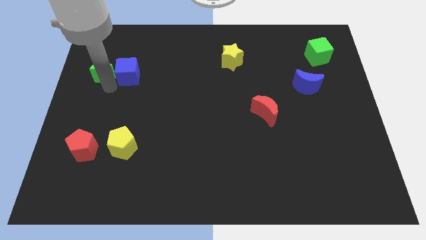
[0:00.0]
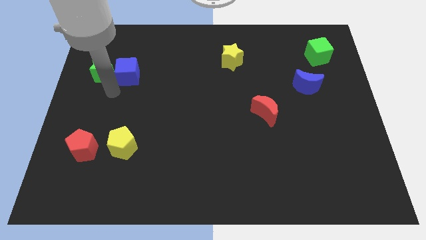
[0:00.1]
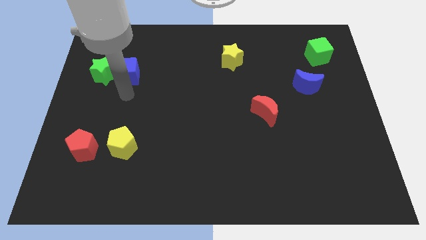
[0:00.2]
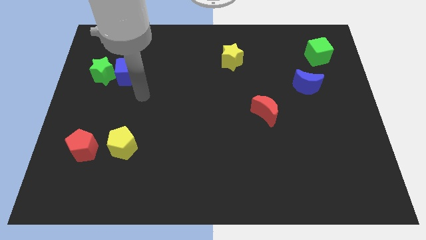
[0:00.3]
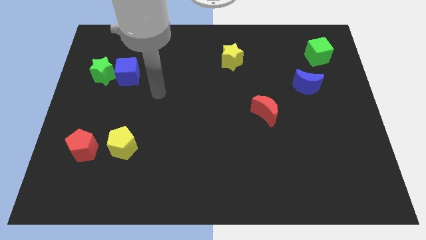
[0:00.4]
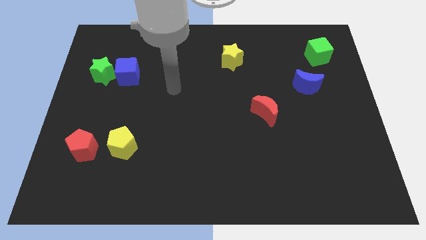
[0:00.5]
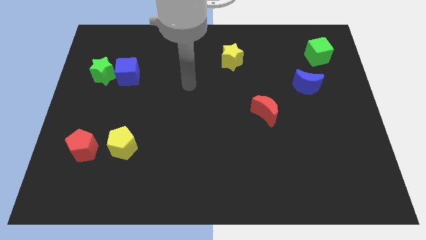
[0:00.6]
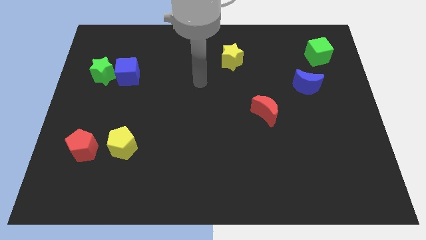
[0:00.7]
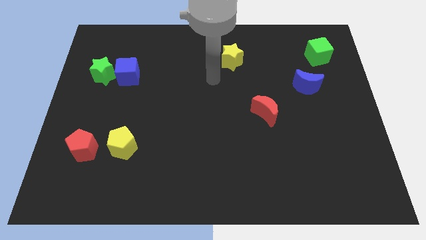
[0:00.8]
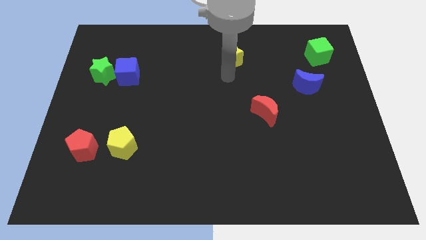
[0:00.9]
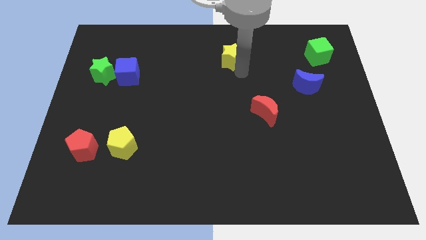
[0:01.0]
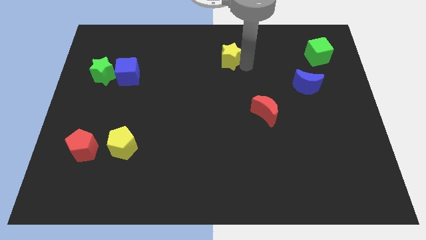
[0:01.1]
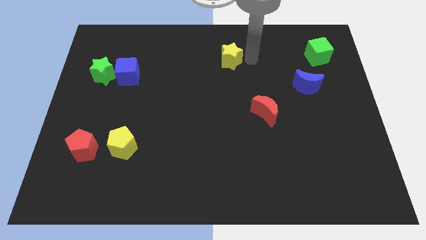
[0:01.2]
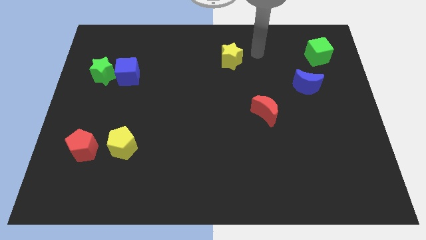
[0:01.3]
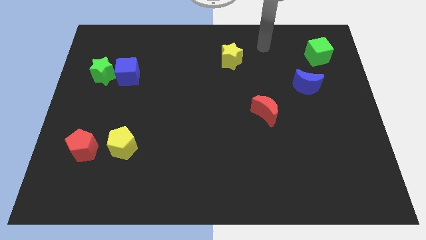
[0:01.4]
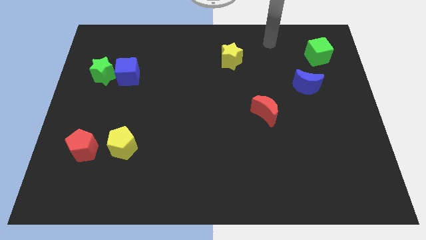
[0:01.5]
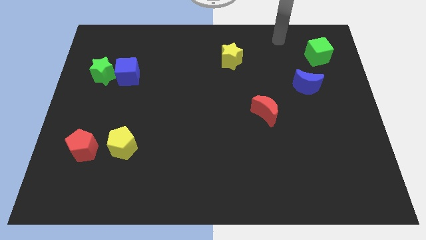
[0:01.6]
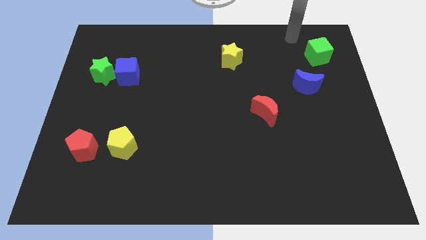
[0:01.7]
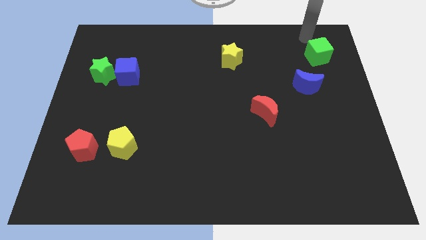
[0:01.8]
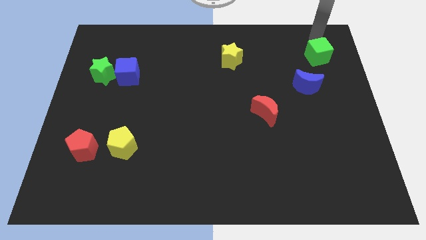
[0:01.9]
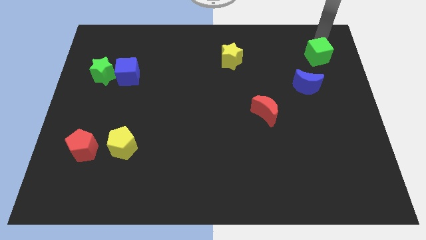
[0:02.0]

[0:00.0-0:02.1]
place arm on the top of green cube

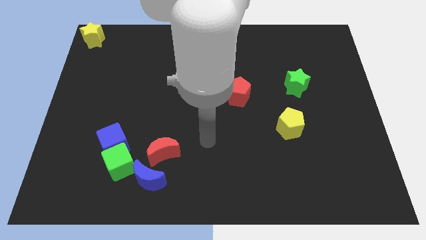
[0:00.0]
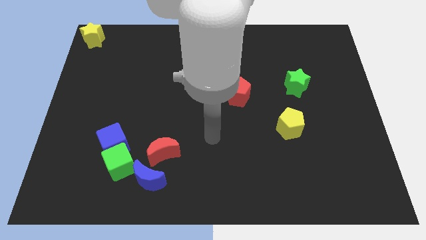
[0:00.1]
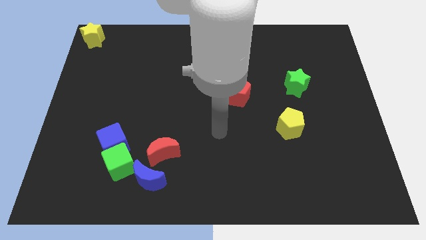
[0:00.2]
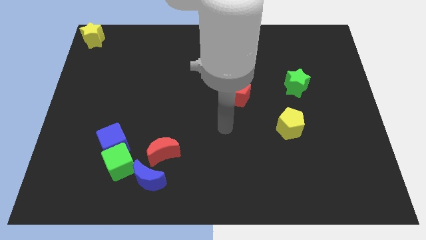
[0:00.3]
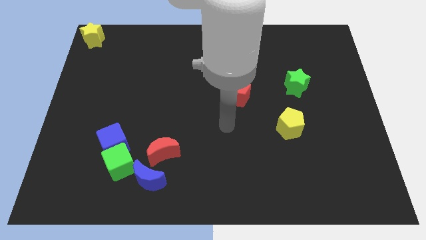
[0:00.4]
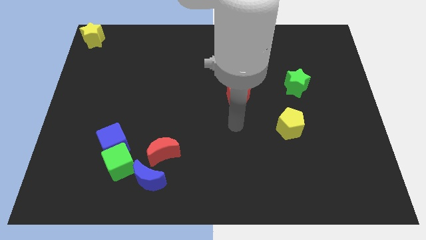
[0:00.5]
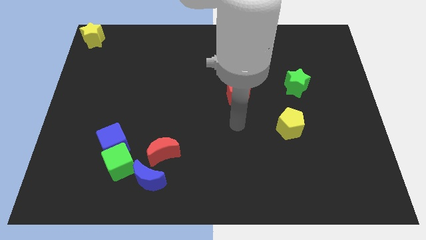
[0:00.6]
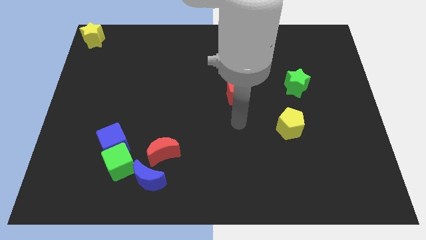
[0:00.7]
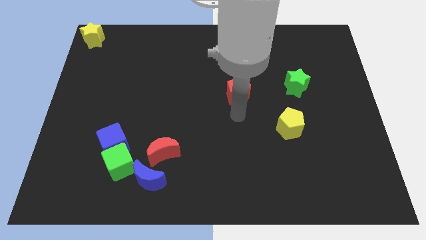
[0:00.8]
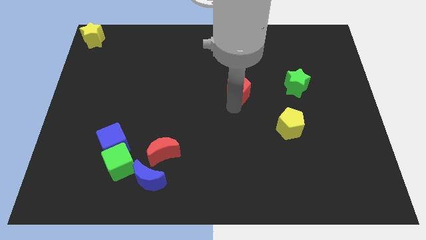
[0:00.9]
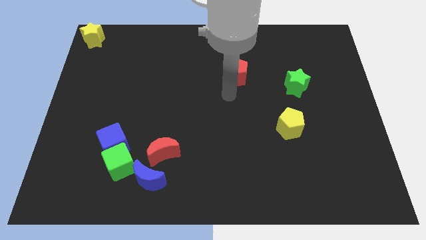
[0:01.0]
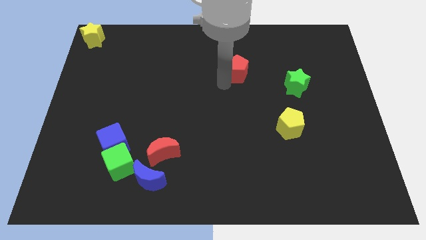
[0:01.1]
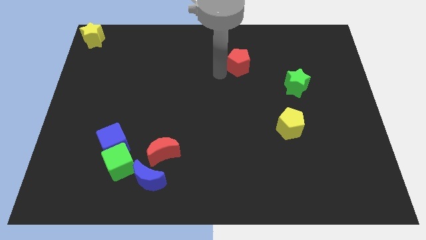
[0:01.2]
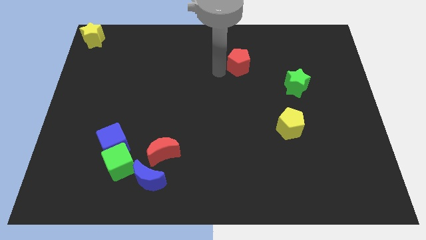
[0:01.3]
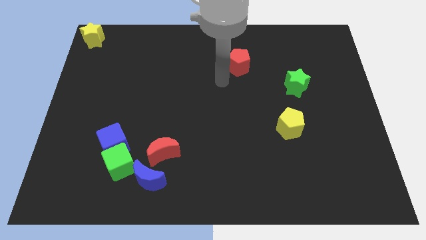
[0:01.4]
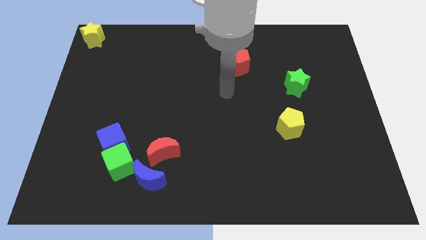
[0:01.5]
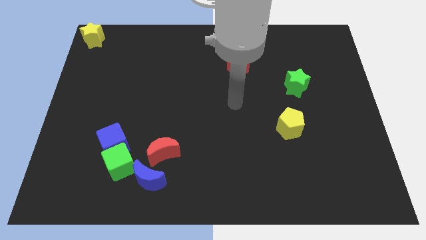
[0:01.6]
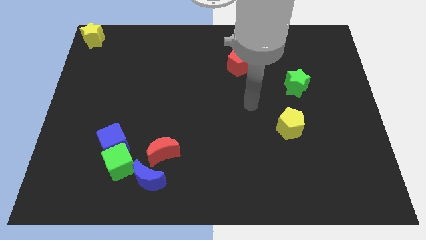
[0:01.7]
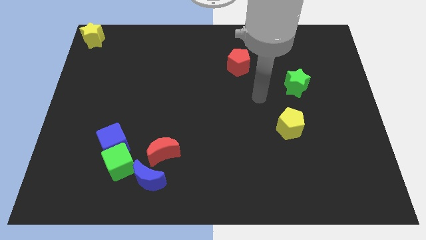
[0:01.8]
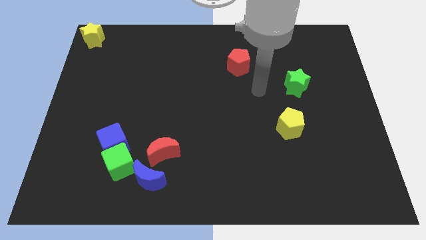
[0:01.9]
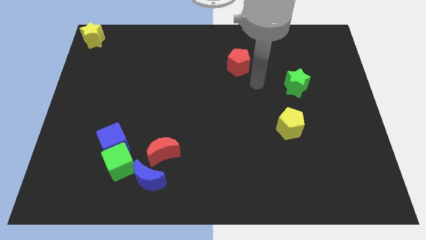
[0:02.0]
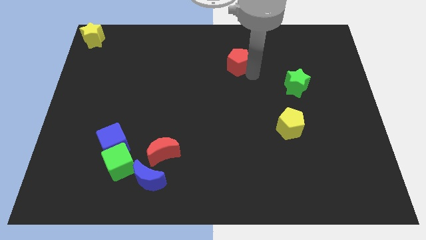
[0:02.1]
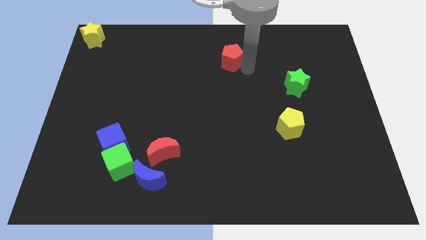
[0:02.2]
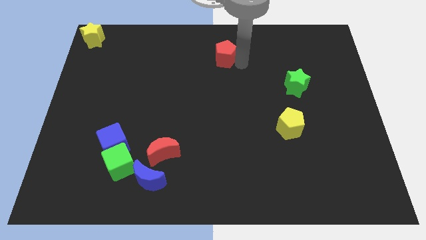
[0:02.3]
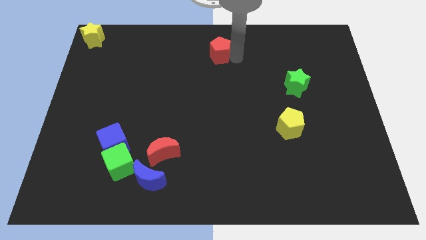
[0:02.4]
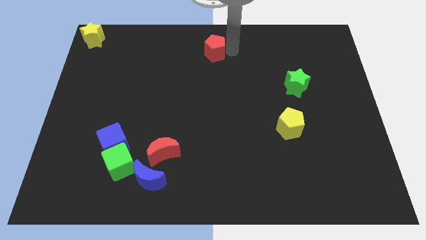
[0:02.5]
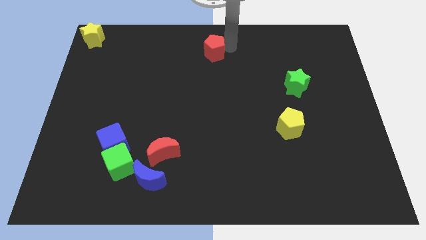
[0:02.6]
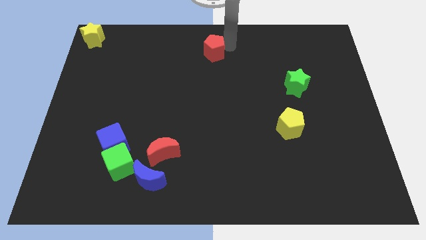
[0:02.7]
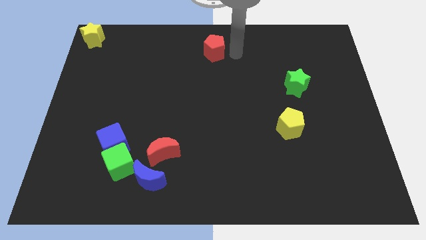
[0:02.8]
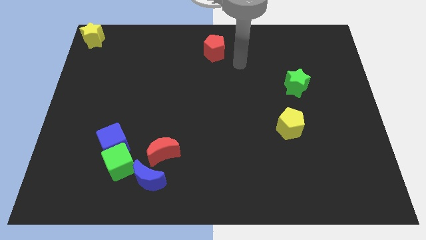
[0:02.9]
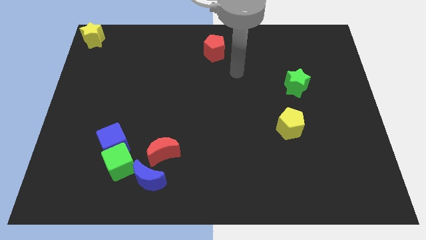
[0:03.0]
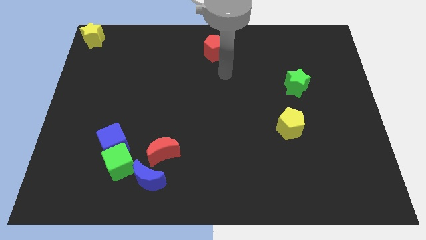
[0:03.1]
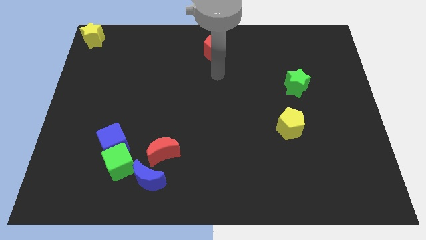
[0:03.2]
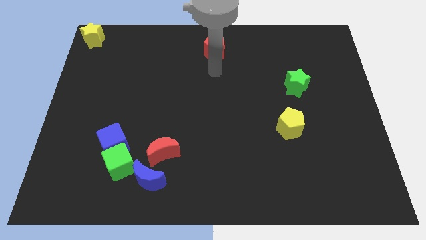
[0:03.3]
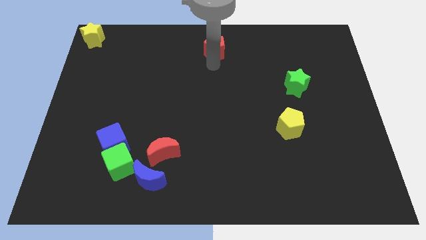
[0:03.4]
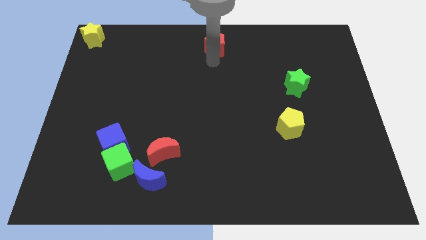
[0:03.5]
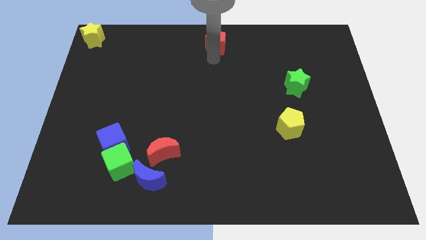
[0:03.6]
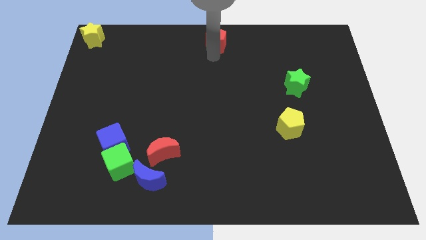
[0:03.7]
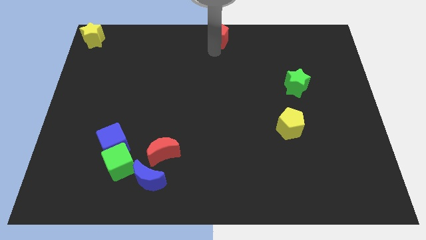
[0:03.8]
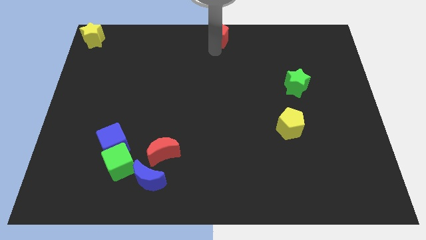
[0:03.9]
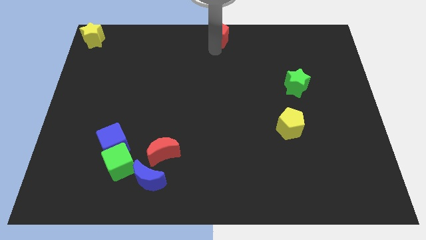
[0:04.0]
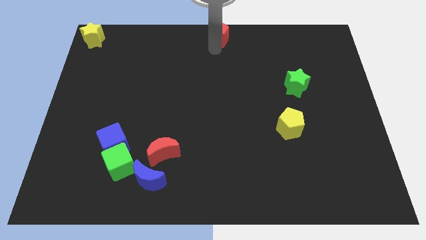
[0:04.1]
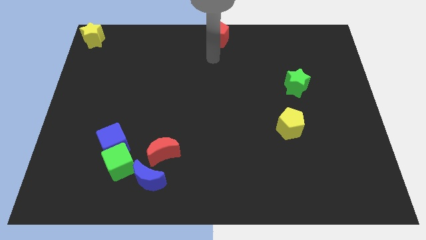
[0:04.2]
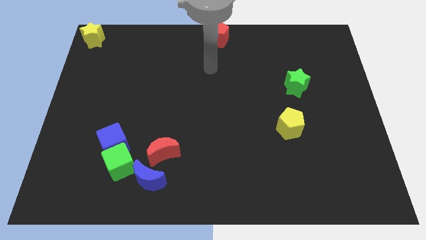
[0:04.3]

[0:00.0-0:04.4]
push the red pentagon to the top center of the board

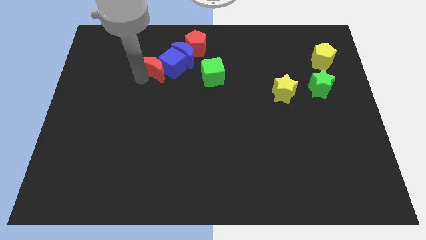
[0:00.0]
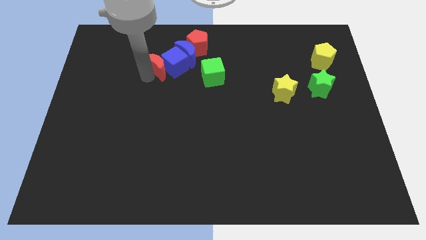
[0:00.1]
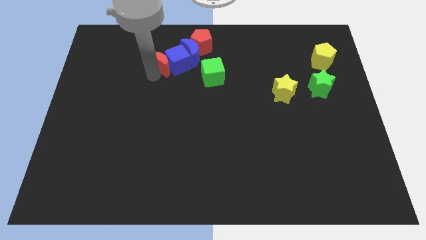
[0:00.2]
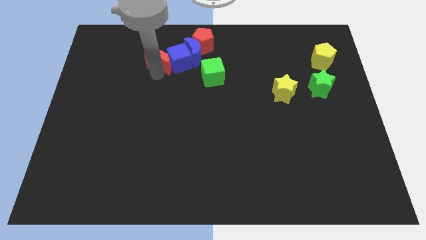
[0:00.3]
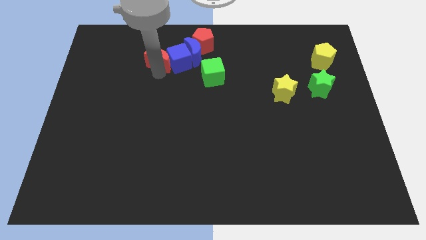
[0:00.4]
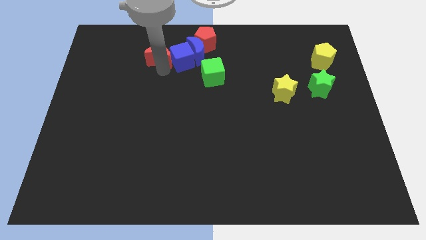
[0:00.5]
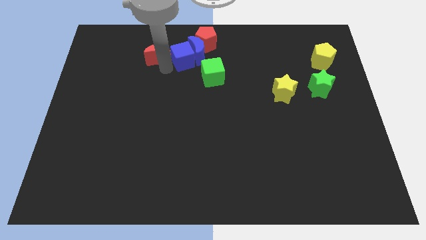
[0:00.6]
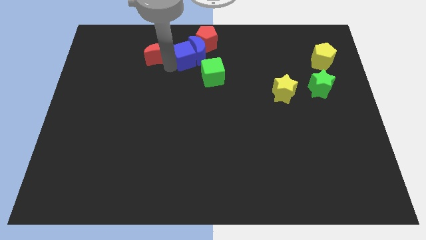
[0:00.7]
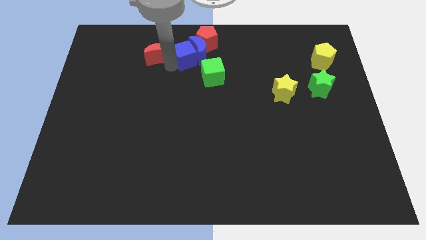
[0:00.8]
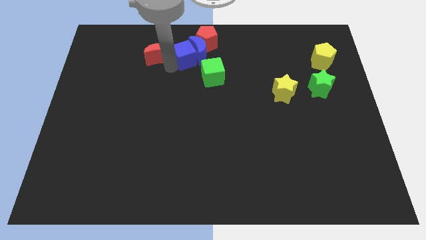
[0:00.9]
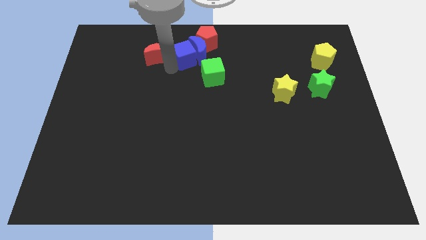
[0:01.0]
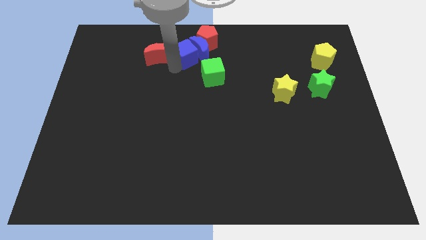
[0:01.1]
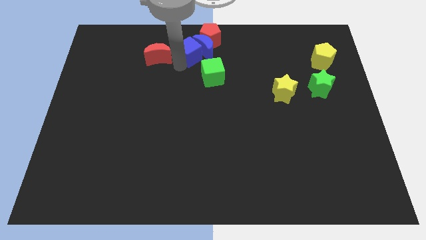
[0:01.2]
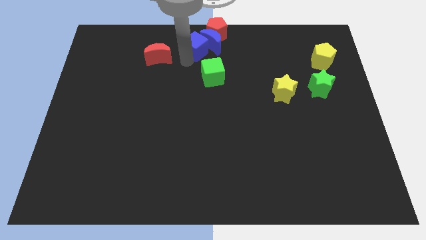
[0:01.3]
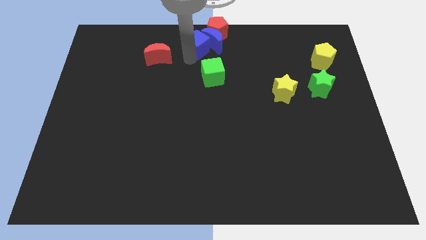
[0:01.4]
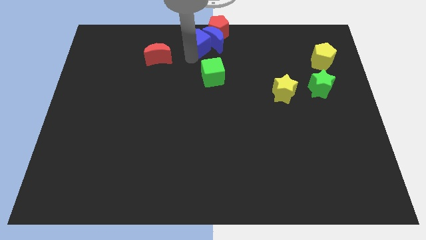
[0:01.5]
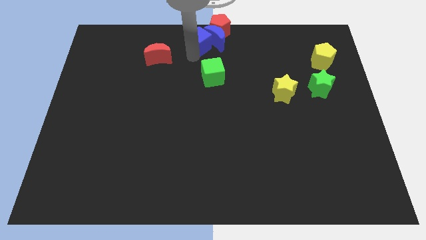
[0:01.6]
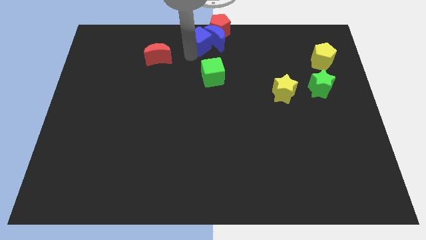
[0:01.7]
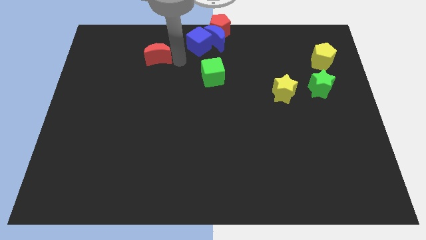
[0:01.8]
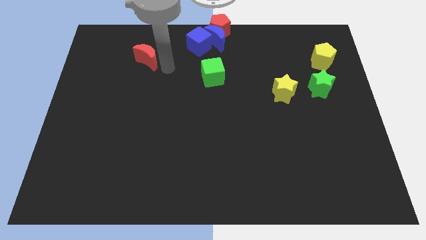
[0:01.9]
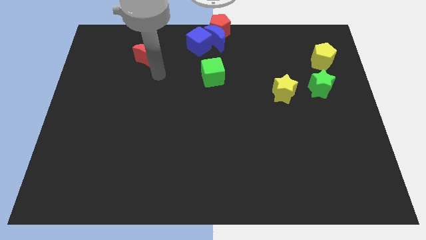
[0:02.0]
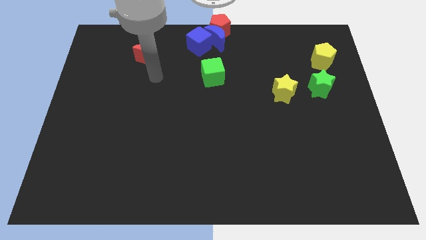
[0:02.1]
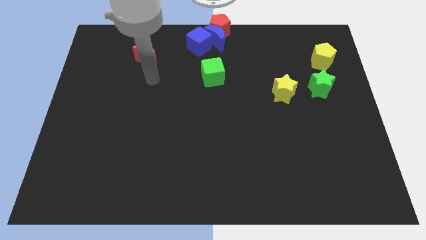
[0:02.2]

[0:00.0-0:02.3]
push the blue cube along with the blue crescent and red pentagon to the top center of the board

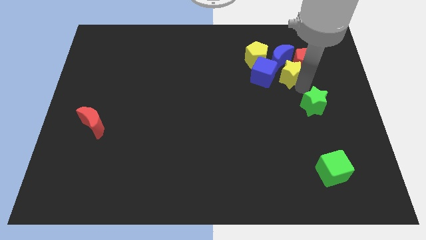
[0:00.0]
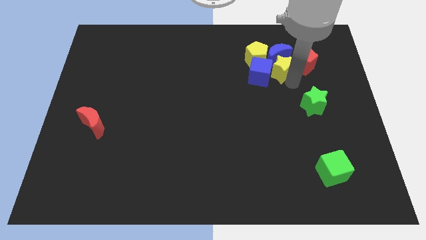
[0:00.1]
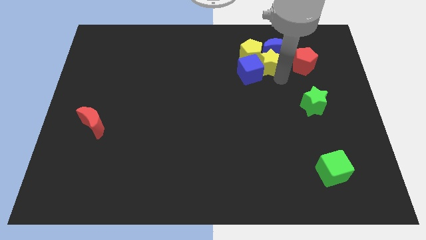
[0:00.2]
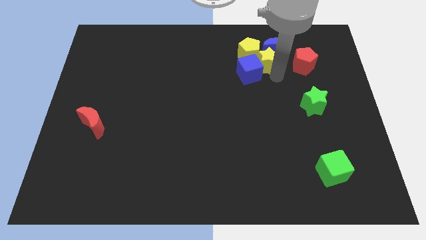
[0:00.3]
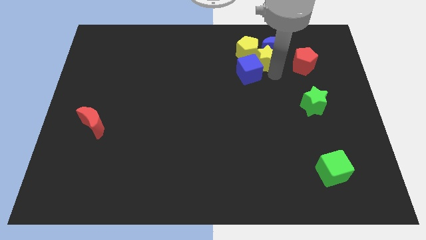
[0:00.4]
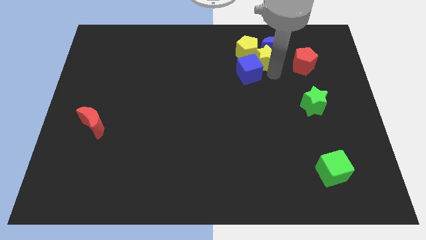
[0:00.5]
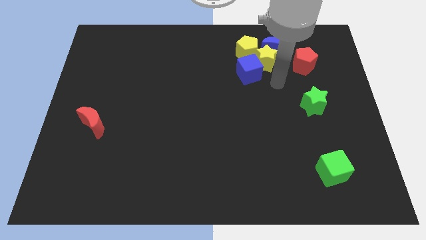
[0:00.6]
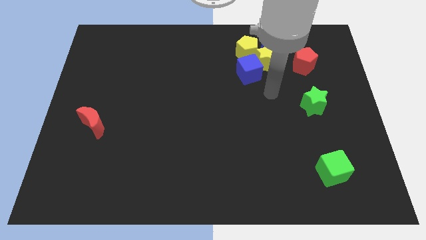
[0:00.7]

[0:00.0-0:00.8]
push the yellow star into the yellow pentagon
